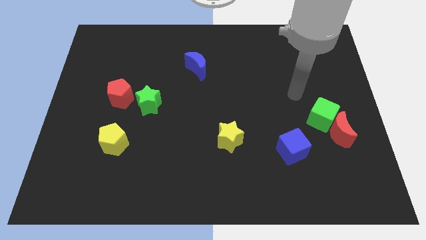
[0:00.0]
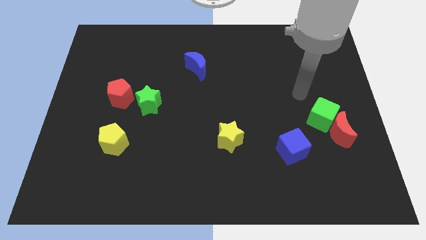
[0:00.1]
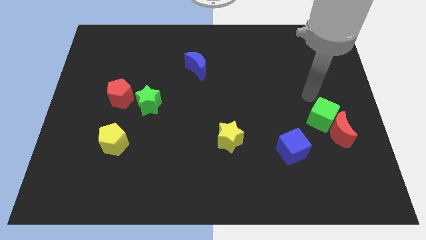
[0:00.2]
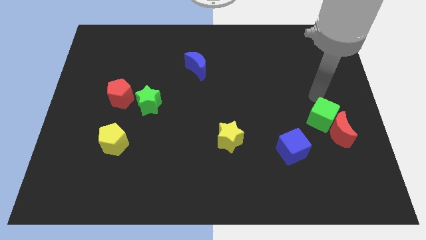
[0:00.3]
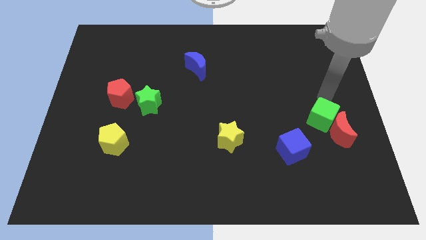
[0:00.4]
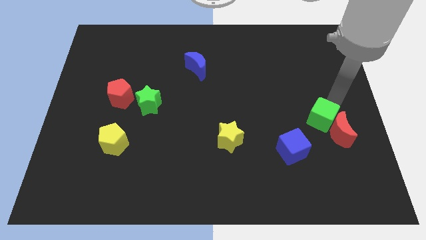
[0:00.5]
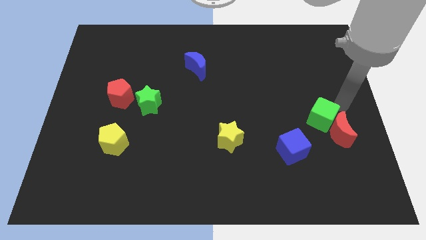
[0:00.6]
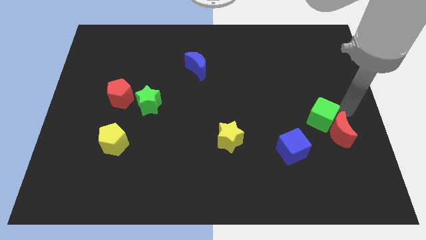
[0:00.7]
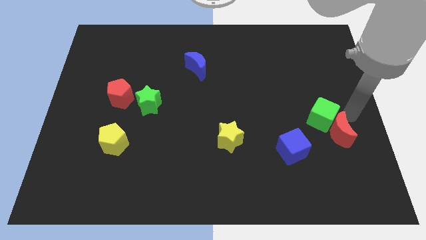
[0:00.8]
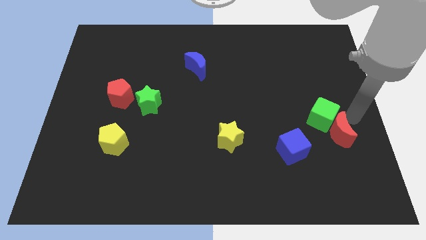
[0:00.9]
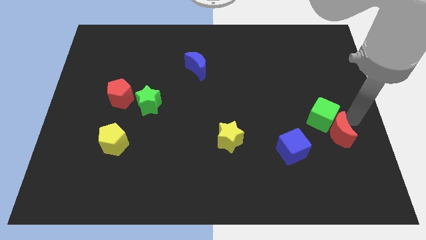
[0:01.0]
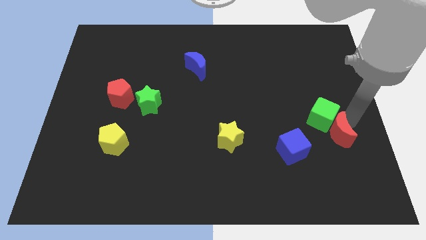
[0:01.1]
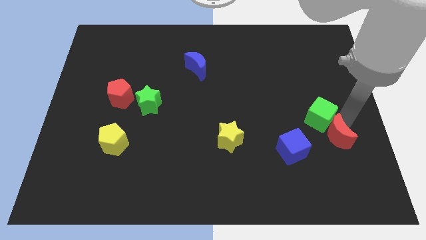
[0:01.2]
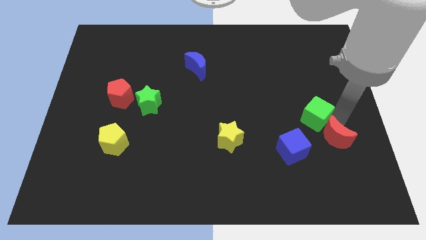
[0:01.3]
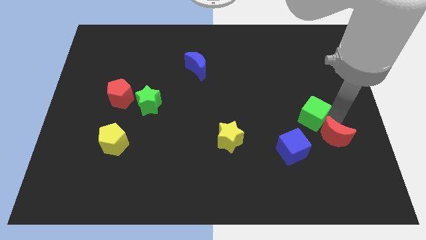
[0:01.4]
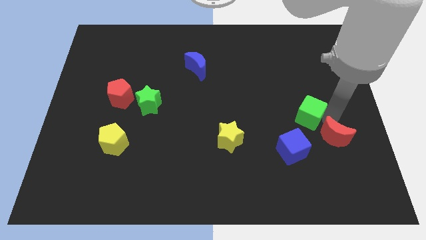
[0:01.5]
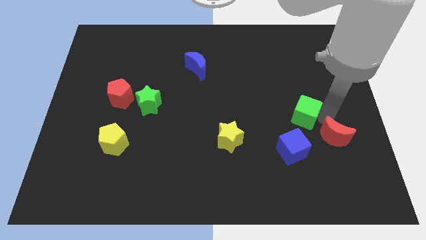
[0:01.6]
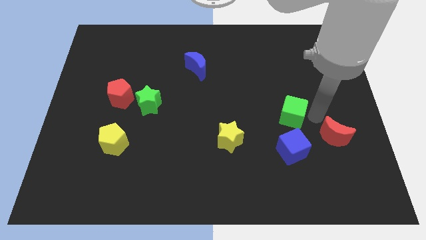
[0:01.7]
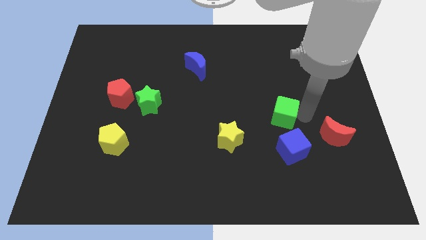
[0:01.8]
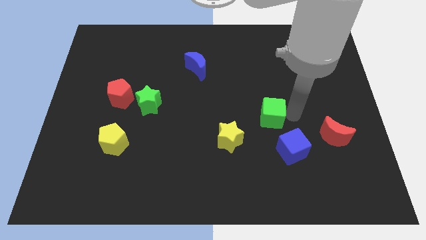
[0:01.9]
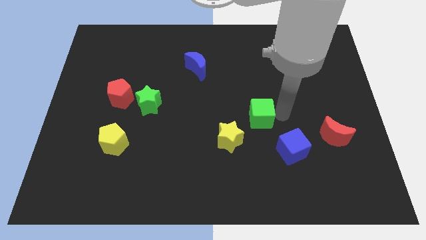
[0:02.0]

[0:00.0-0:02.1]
separate the green cube from the red moon

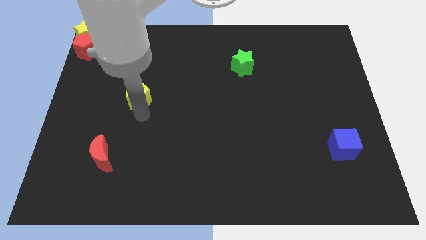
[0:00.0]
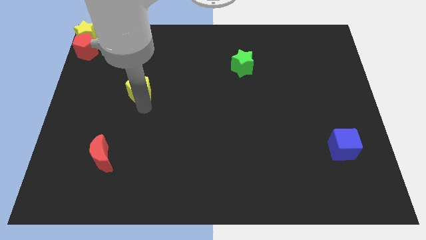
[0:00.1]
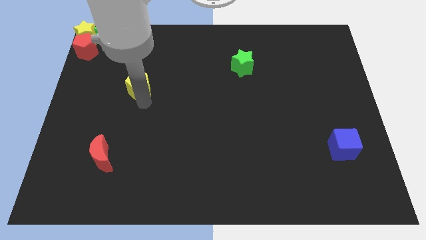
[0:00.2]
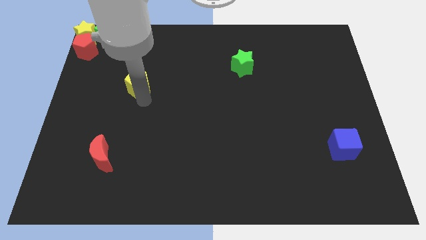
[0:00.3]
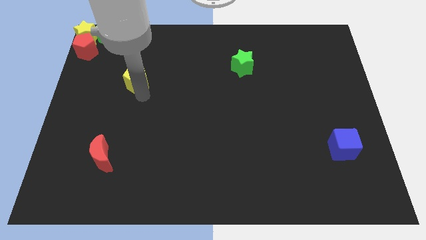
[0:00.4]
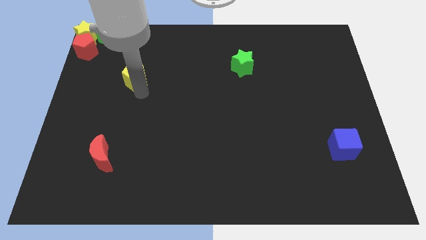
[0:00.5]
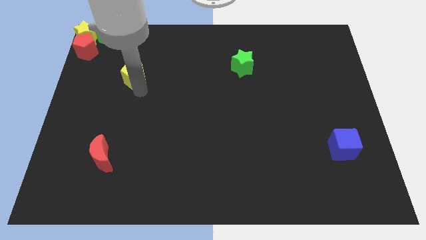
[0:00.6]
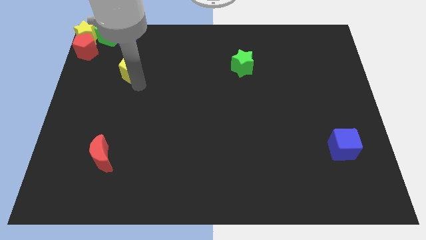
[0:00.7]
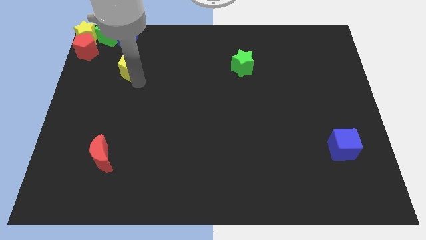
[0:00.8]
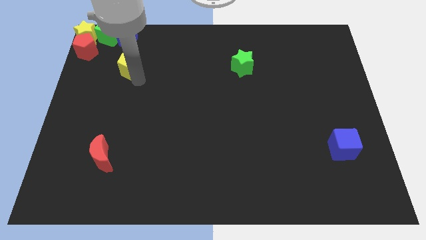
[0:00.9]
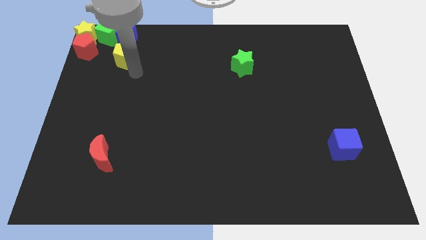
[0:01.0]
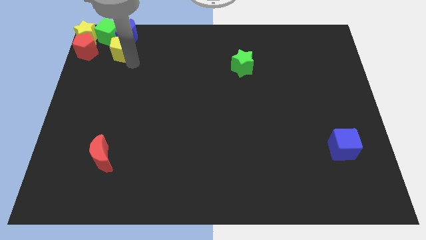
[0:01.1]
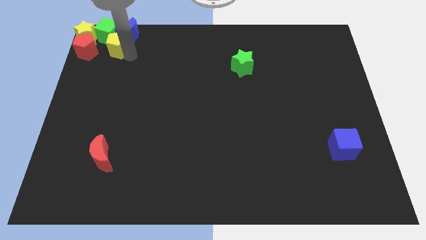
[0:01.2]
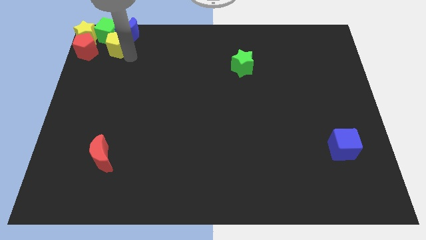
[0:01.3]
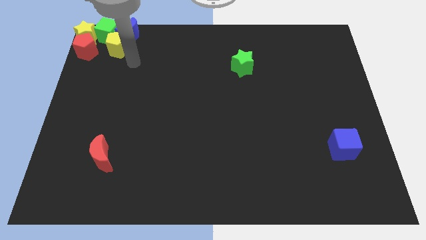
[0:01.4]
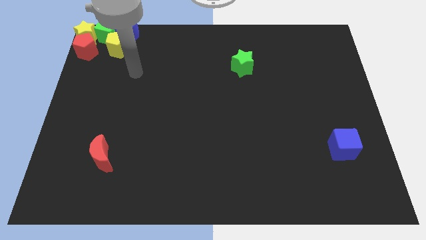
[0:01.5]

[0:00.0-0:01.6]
add the yellow pentagon to the group of blocks at the top left corner of the board

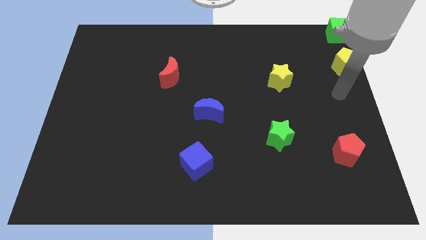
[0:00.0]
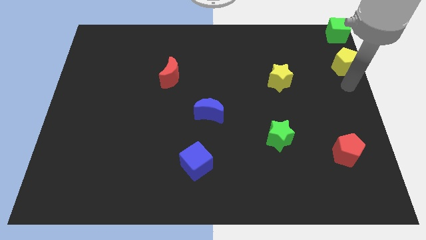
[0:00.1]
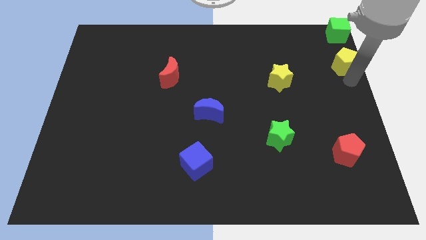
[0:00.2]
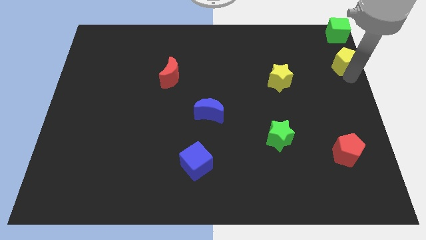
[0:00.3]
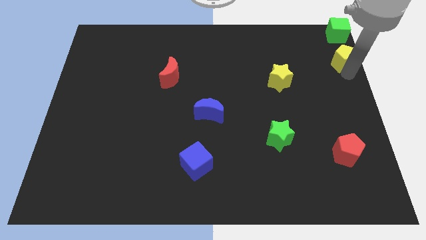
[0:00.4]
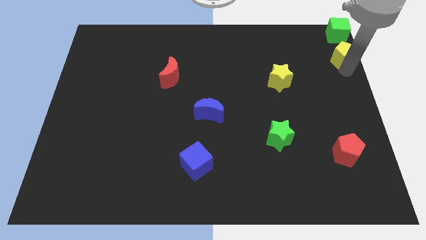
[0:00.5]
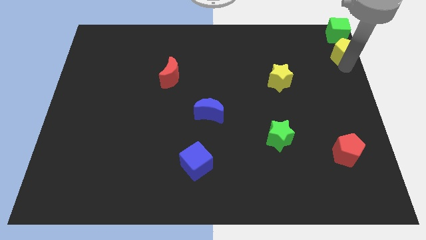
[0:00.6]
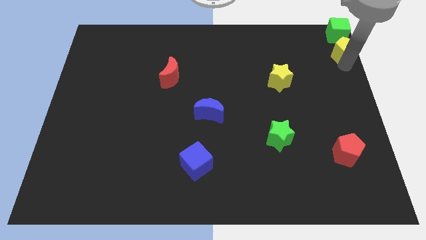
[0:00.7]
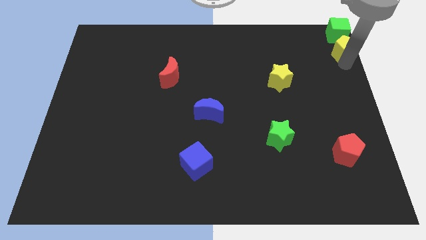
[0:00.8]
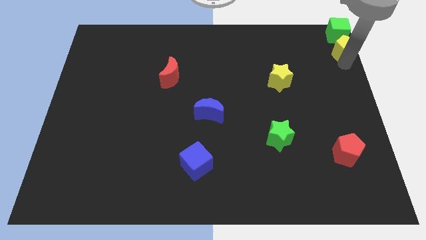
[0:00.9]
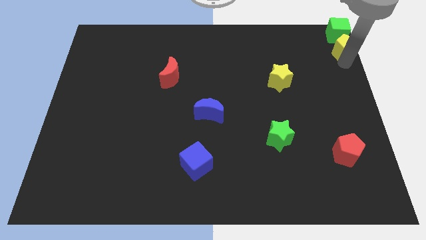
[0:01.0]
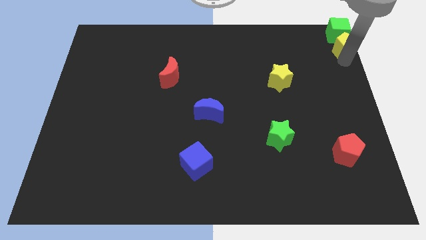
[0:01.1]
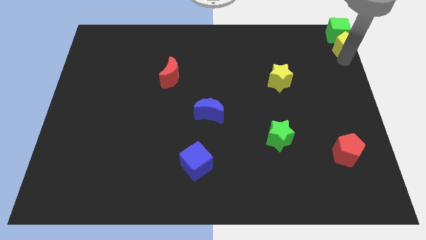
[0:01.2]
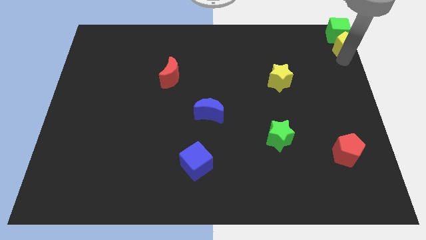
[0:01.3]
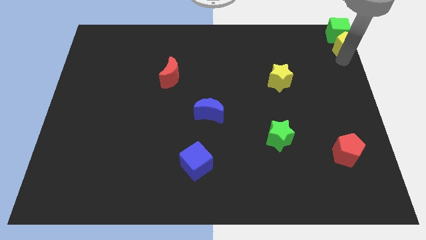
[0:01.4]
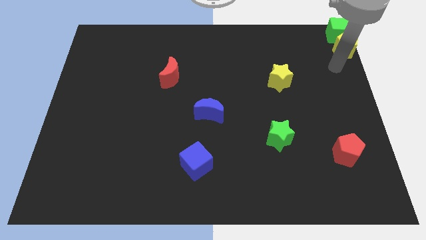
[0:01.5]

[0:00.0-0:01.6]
move the yellow block to the bottom side of the green block

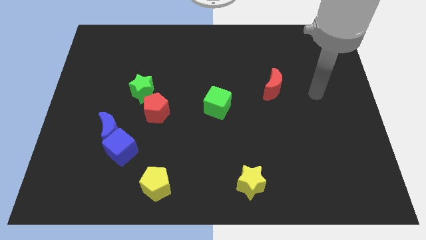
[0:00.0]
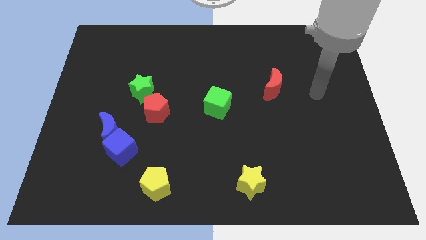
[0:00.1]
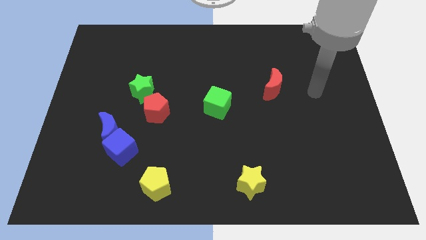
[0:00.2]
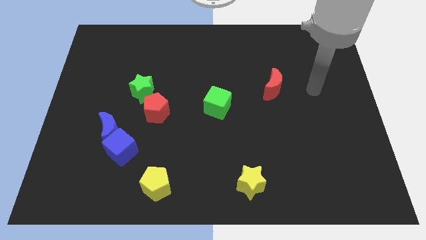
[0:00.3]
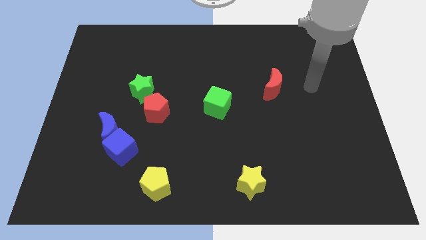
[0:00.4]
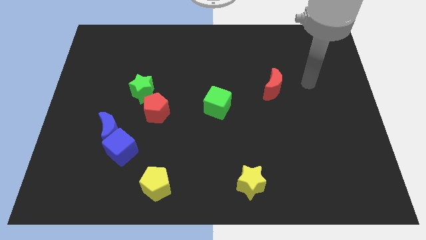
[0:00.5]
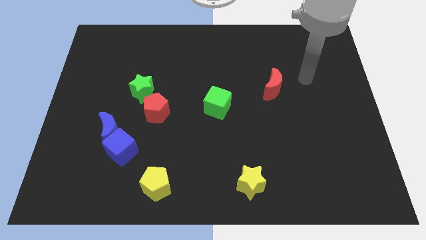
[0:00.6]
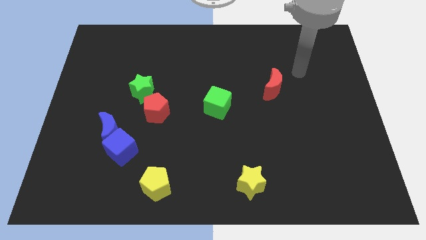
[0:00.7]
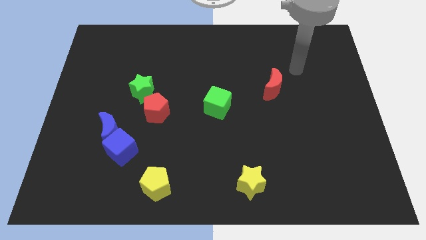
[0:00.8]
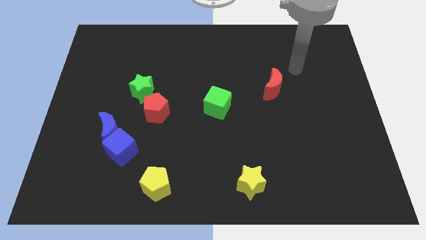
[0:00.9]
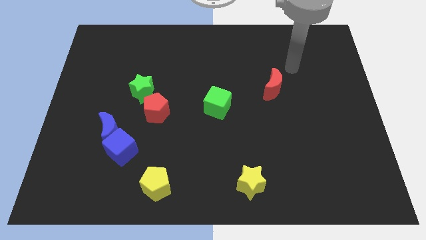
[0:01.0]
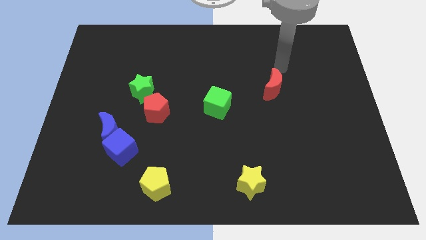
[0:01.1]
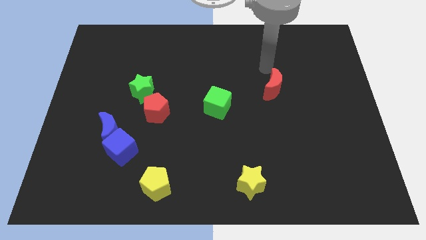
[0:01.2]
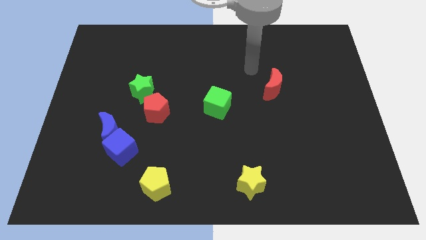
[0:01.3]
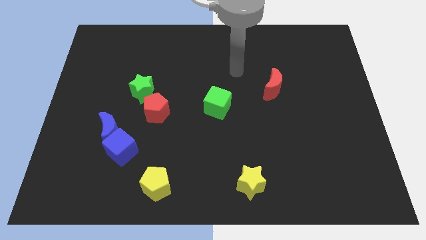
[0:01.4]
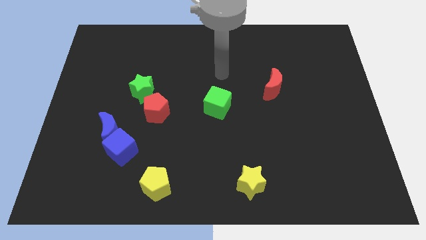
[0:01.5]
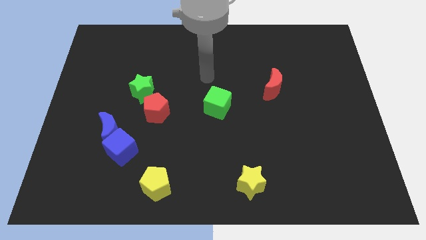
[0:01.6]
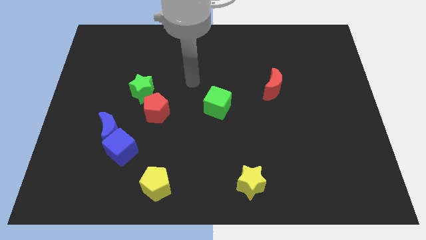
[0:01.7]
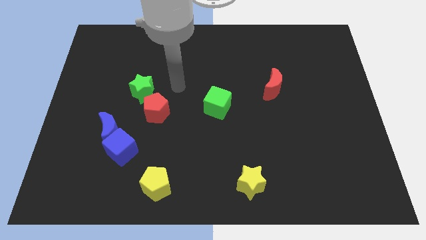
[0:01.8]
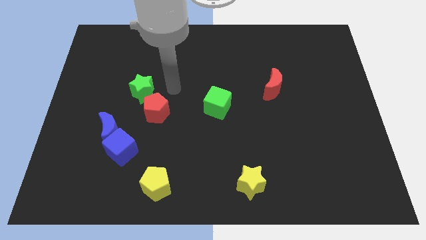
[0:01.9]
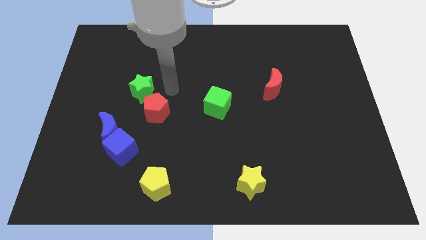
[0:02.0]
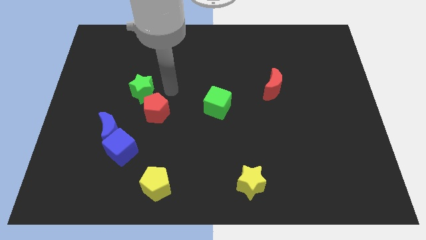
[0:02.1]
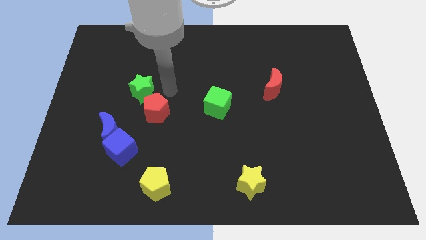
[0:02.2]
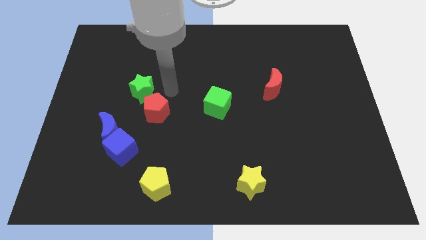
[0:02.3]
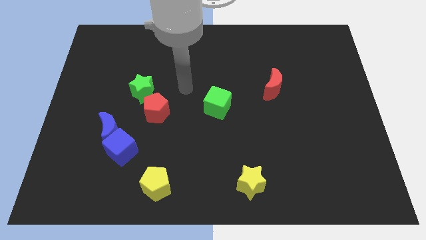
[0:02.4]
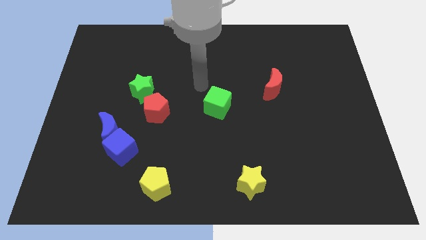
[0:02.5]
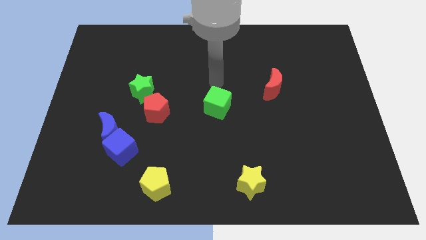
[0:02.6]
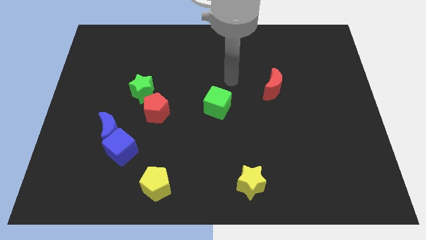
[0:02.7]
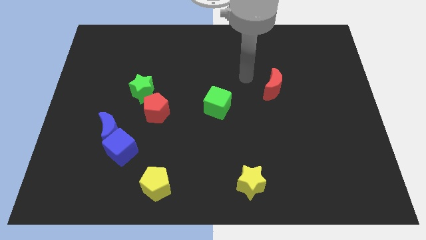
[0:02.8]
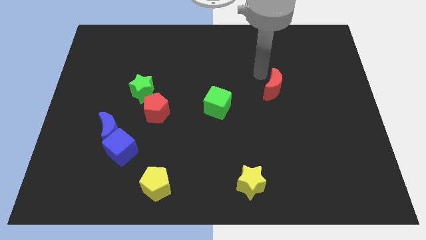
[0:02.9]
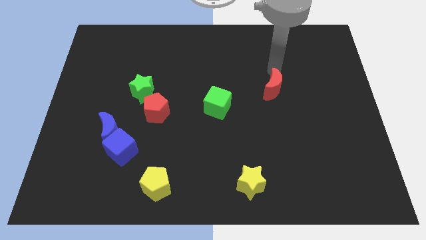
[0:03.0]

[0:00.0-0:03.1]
place the arm above the red moon

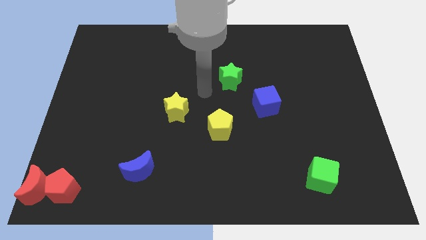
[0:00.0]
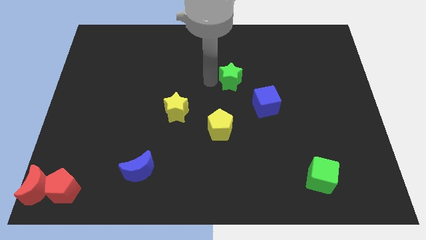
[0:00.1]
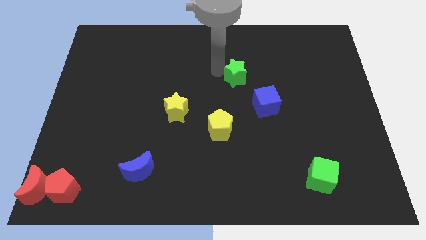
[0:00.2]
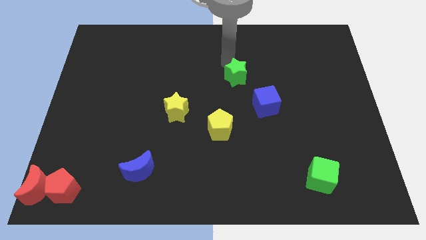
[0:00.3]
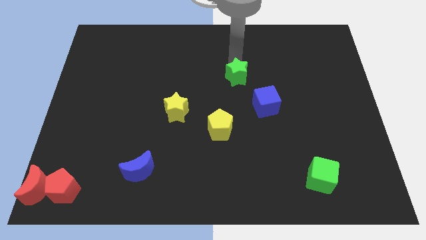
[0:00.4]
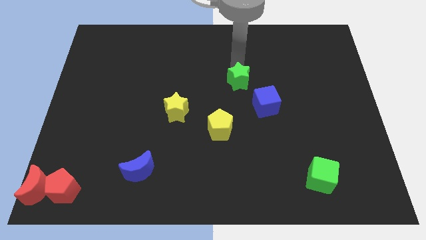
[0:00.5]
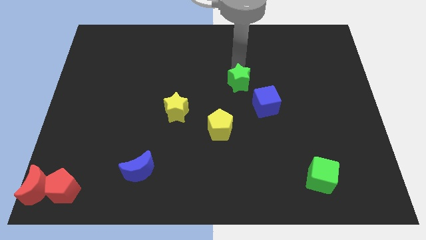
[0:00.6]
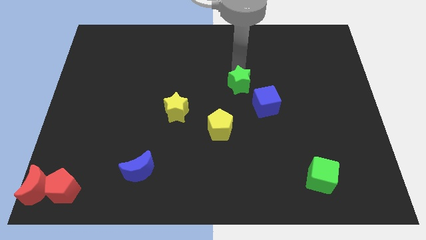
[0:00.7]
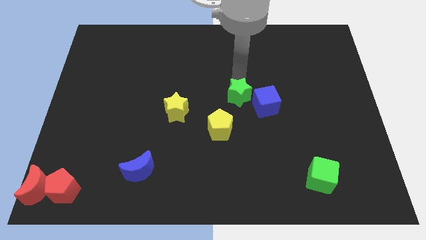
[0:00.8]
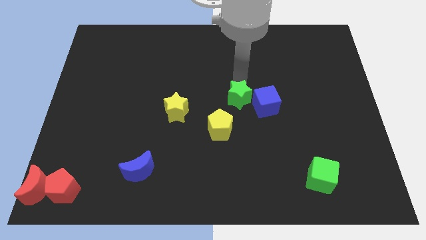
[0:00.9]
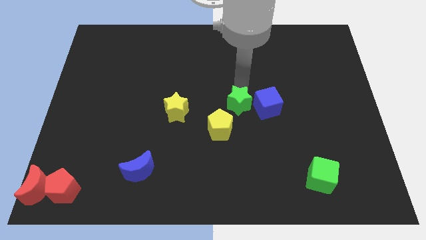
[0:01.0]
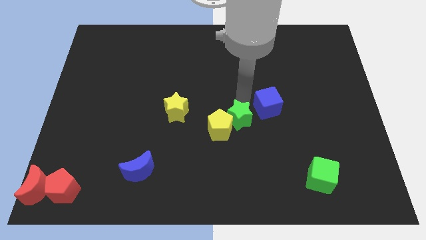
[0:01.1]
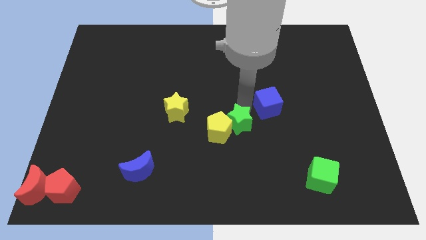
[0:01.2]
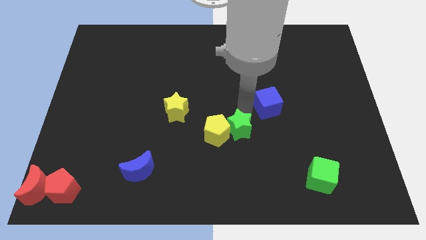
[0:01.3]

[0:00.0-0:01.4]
move the green star into the yellow pentagon
